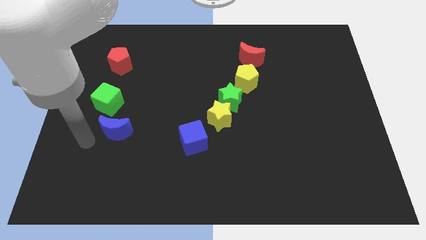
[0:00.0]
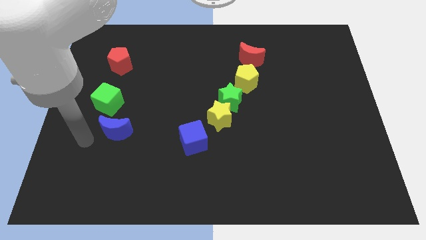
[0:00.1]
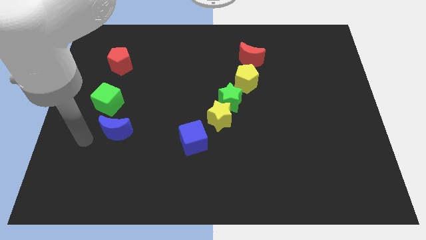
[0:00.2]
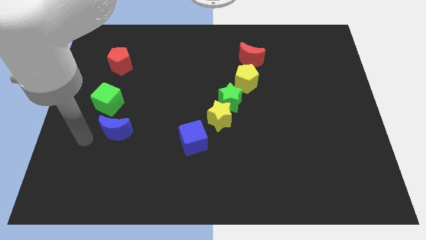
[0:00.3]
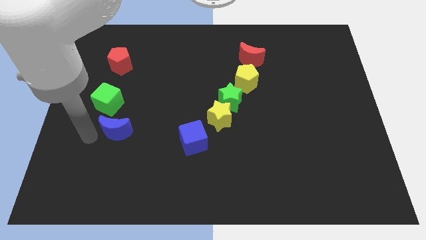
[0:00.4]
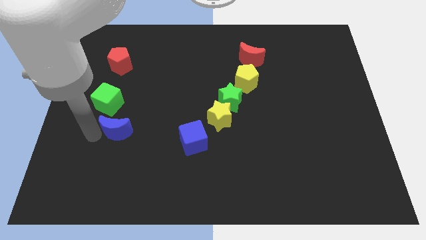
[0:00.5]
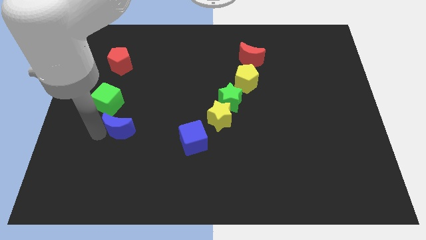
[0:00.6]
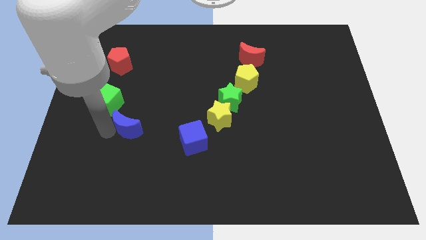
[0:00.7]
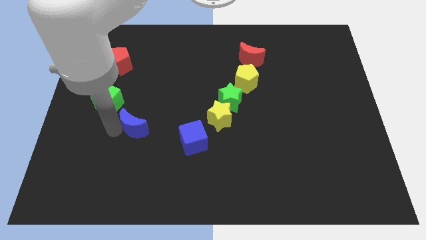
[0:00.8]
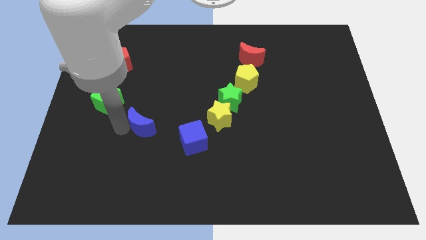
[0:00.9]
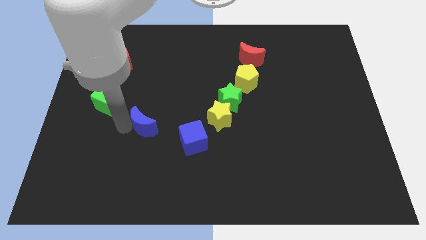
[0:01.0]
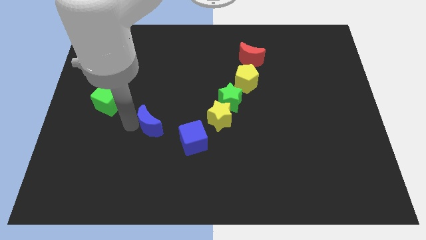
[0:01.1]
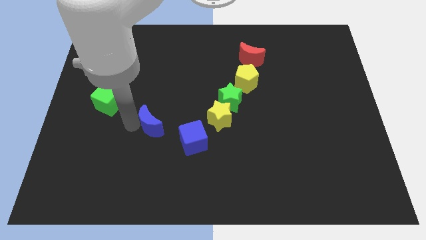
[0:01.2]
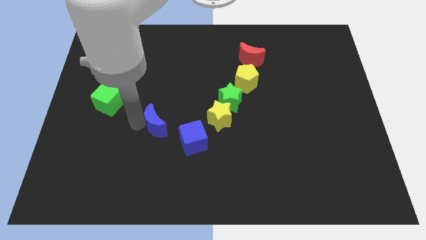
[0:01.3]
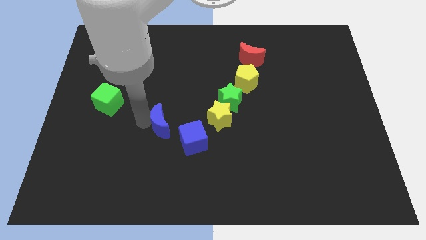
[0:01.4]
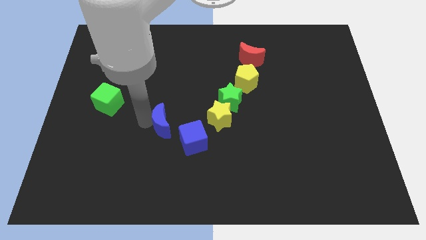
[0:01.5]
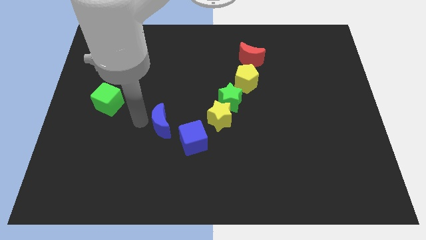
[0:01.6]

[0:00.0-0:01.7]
move the blue crescent to the center of the board

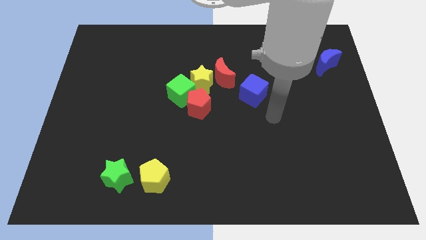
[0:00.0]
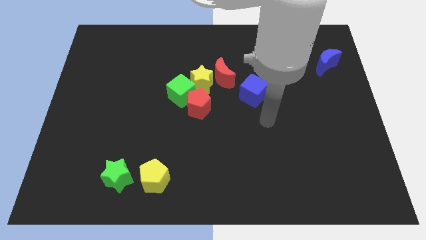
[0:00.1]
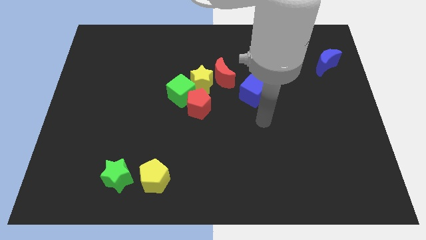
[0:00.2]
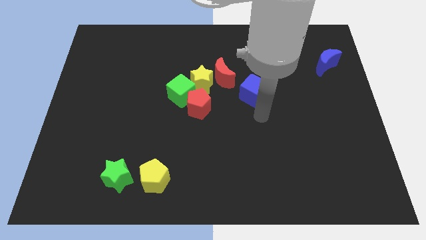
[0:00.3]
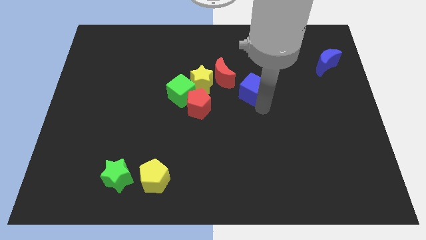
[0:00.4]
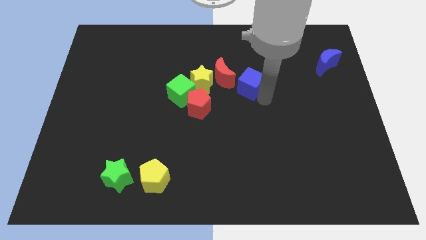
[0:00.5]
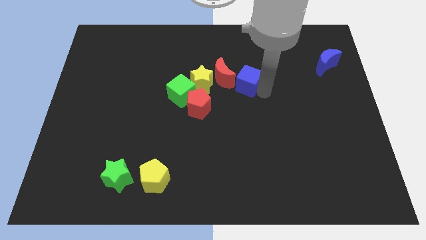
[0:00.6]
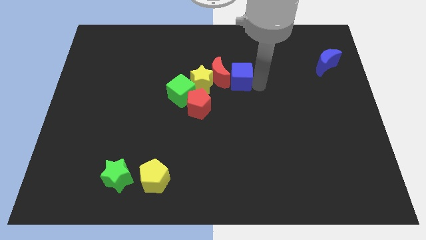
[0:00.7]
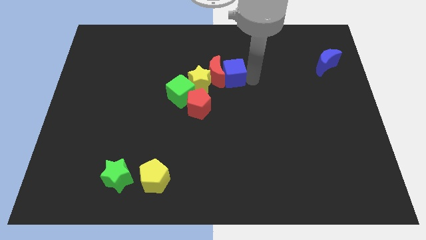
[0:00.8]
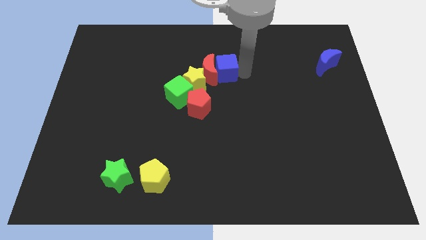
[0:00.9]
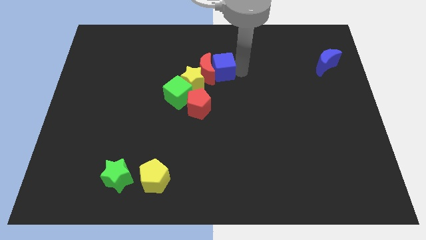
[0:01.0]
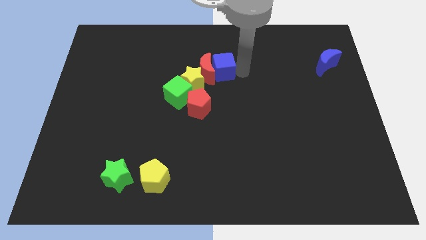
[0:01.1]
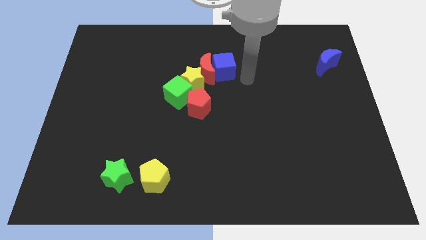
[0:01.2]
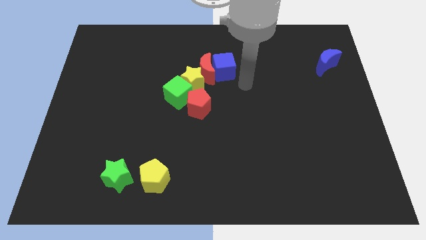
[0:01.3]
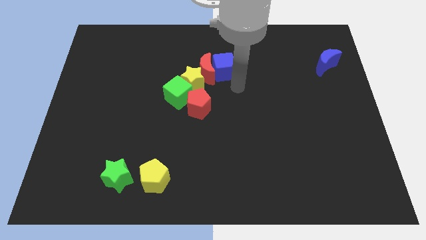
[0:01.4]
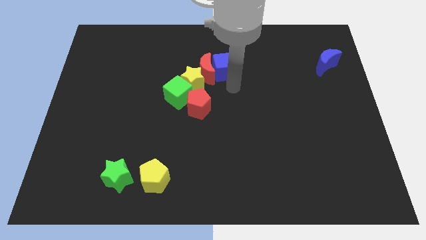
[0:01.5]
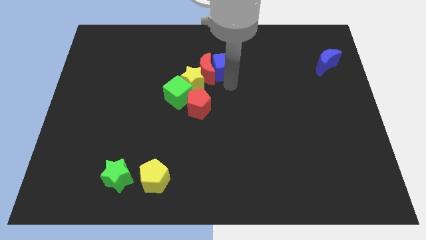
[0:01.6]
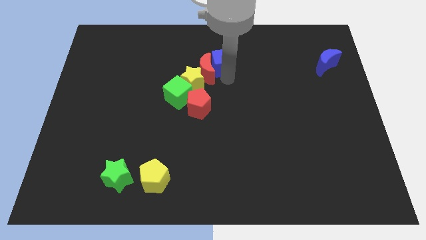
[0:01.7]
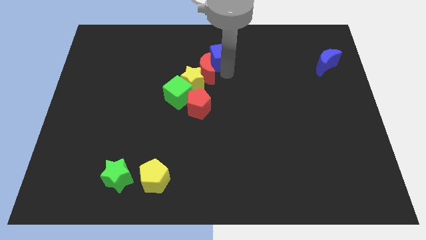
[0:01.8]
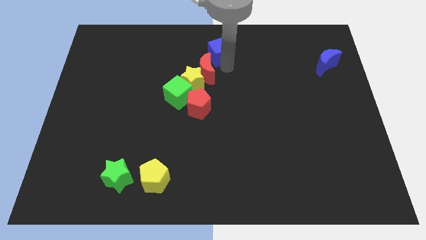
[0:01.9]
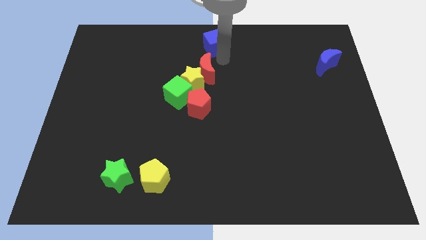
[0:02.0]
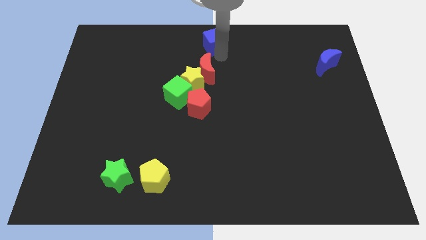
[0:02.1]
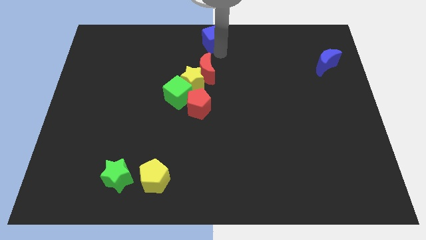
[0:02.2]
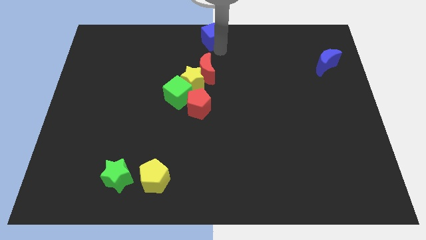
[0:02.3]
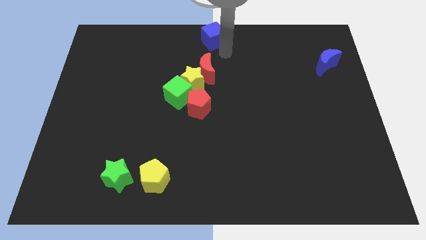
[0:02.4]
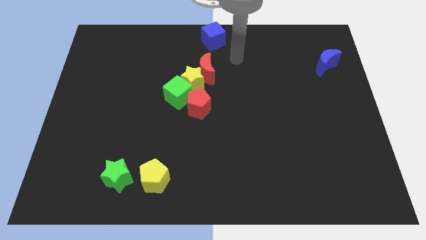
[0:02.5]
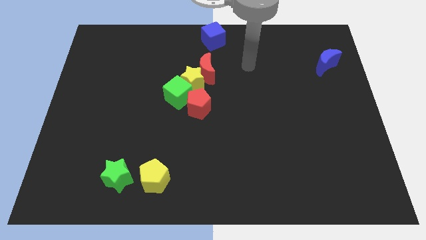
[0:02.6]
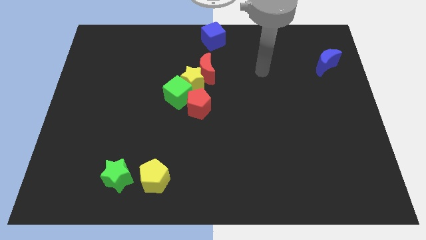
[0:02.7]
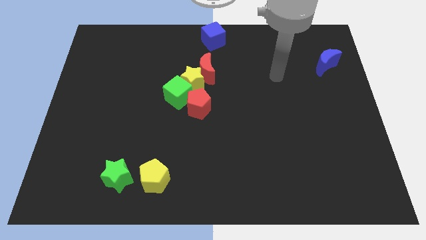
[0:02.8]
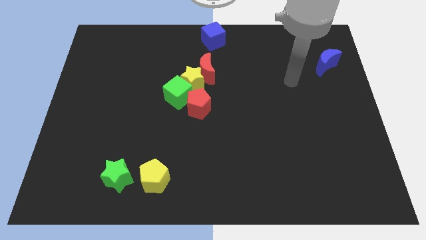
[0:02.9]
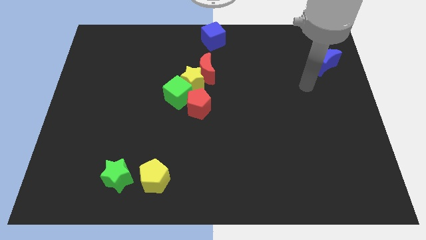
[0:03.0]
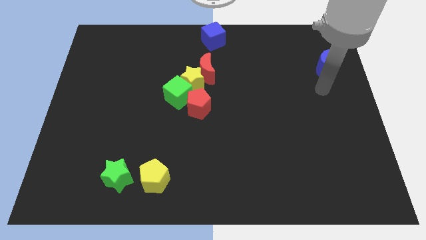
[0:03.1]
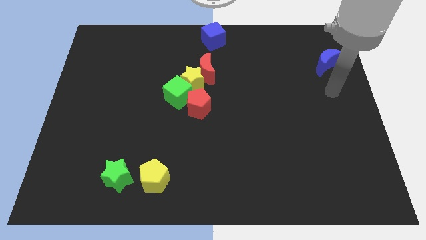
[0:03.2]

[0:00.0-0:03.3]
move the blue cube to the top middle of the board

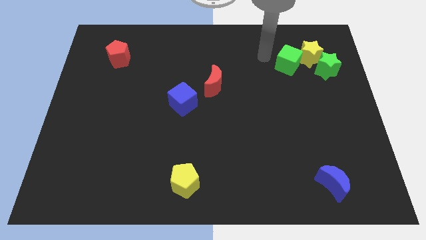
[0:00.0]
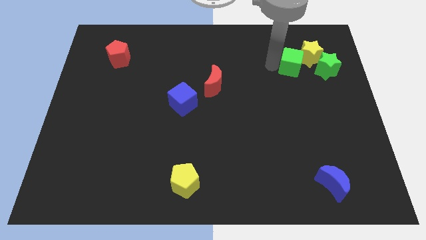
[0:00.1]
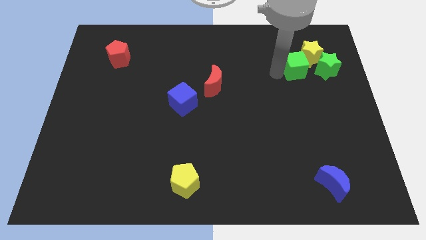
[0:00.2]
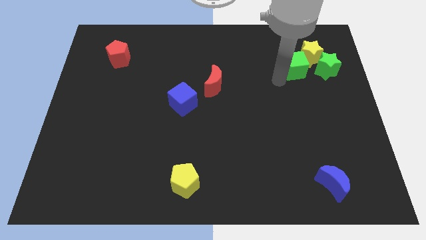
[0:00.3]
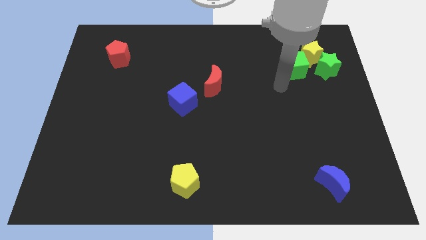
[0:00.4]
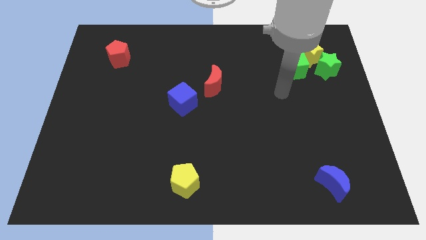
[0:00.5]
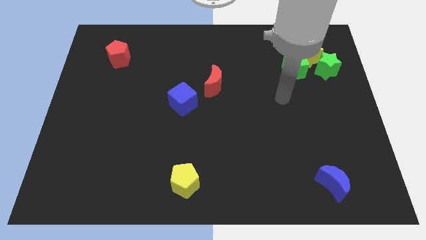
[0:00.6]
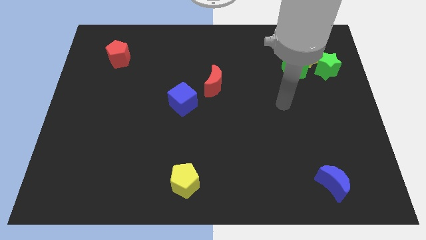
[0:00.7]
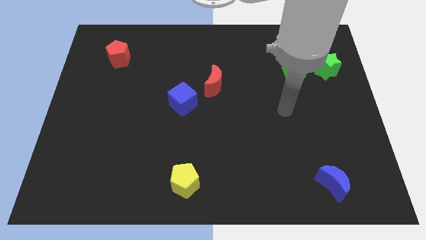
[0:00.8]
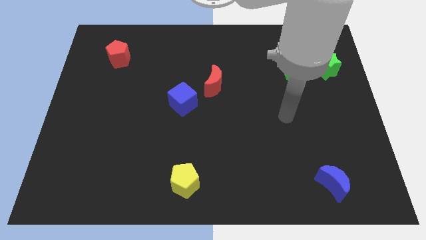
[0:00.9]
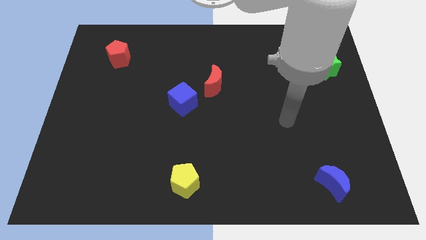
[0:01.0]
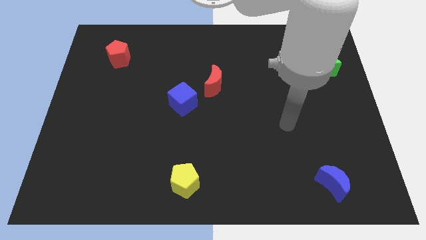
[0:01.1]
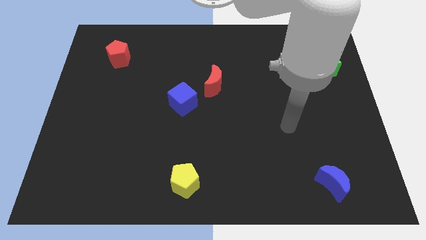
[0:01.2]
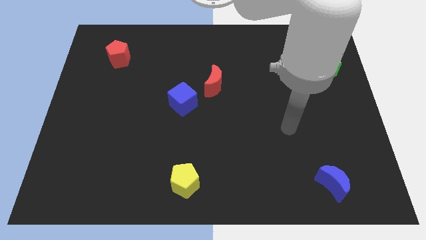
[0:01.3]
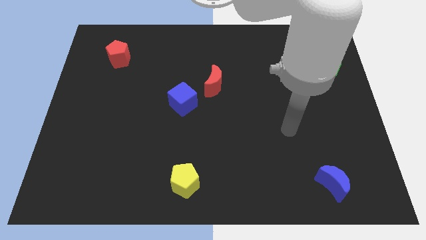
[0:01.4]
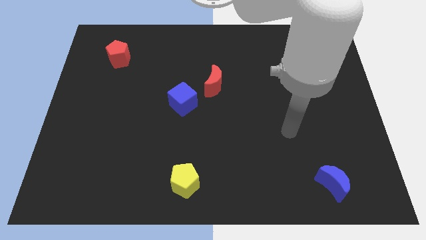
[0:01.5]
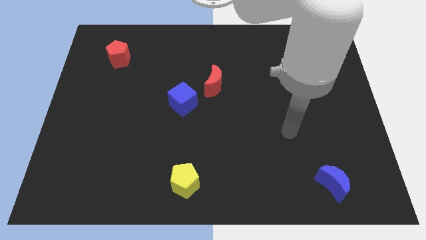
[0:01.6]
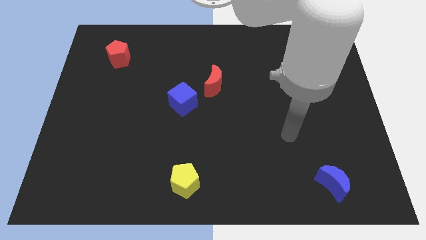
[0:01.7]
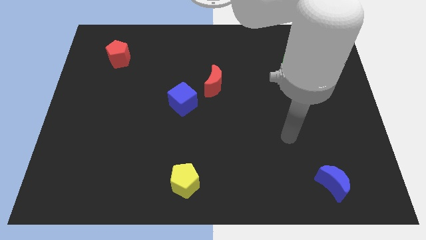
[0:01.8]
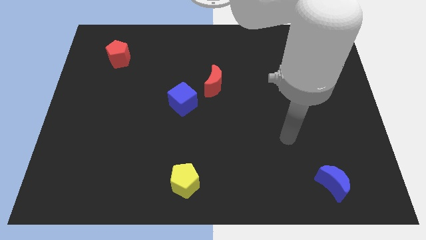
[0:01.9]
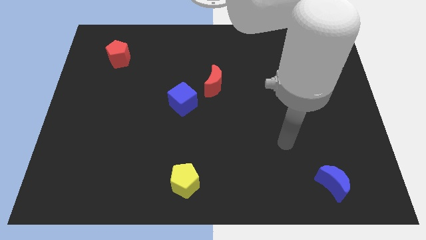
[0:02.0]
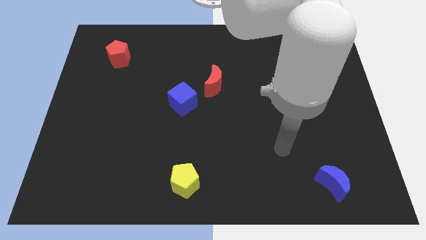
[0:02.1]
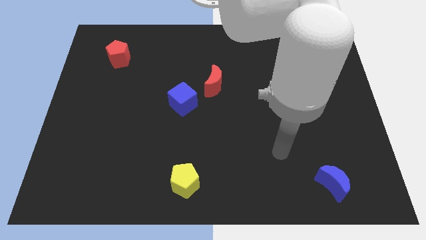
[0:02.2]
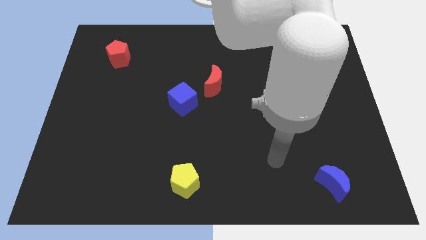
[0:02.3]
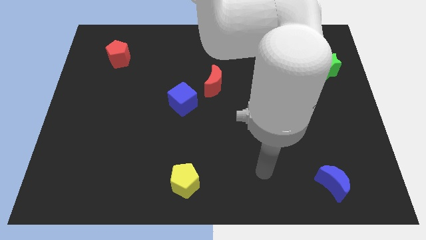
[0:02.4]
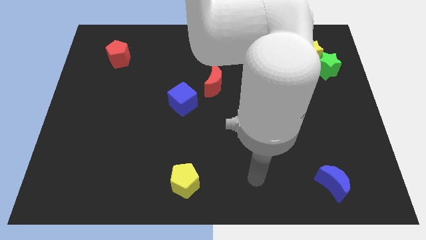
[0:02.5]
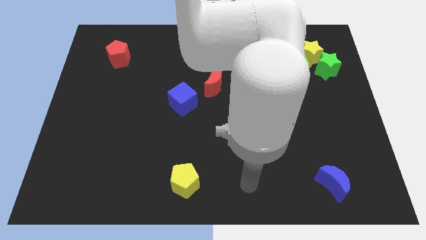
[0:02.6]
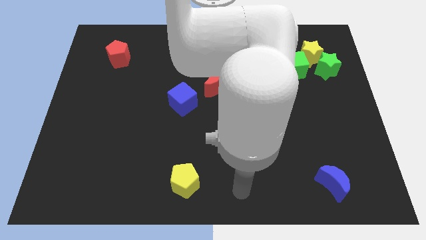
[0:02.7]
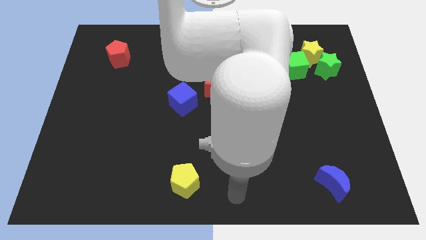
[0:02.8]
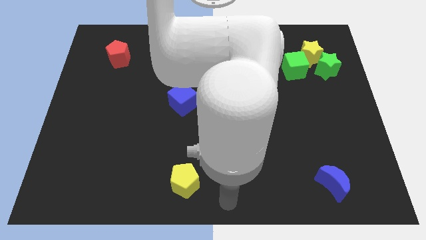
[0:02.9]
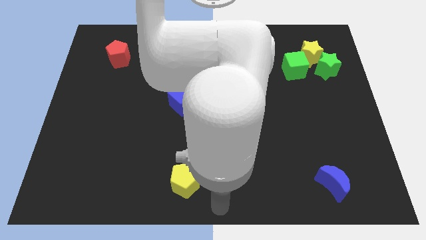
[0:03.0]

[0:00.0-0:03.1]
place arm at bottom center

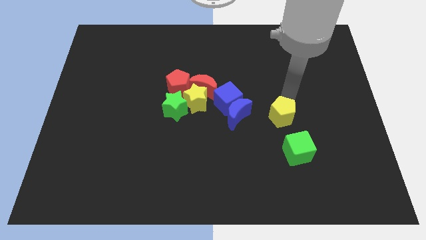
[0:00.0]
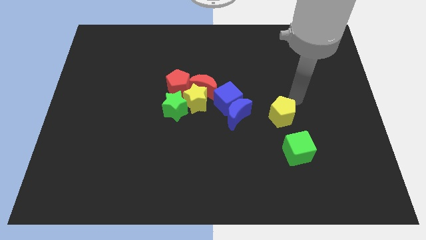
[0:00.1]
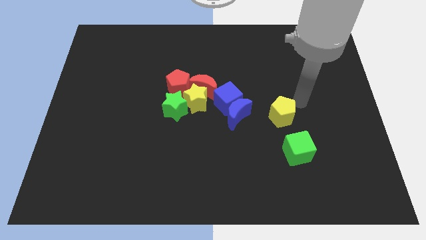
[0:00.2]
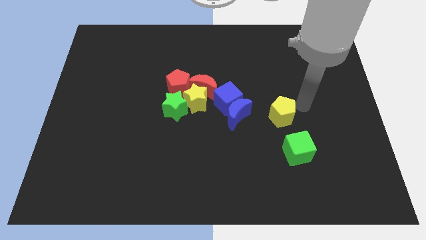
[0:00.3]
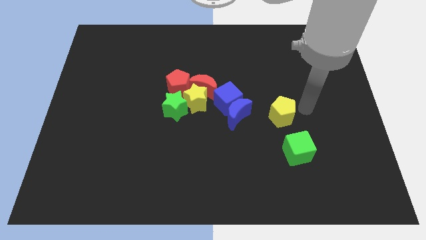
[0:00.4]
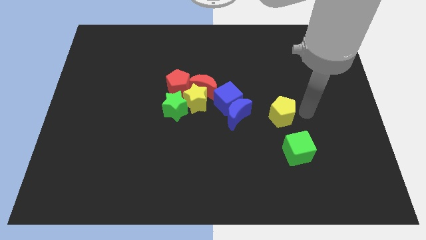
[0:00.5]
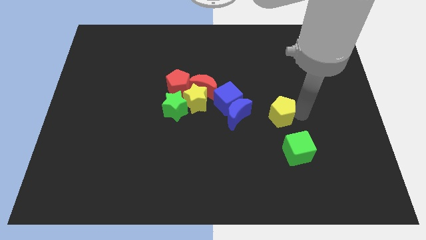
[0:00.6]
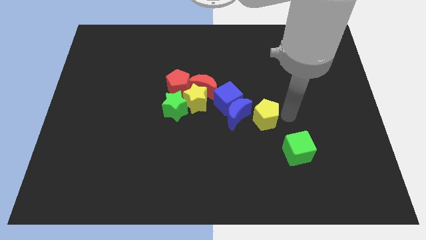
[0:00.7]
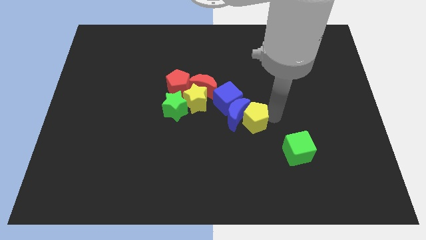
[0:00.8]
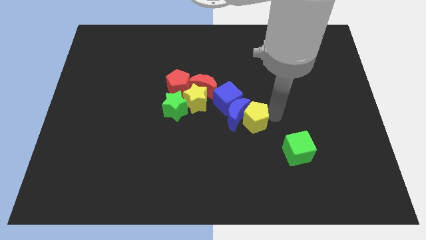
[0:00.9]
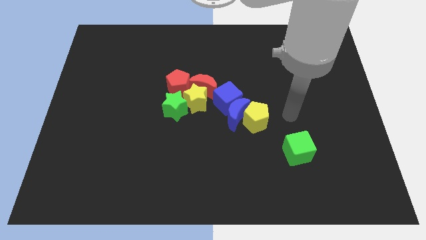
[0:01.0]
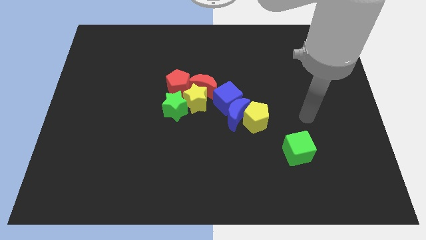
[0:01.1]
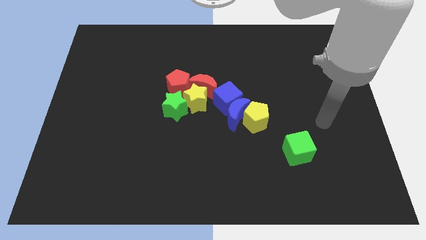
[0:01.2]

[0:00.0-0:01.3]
move the yellow pentagon into the blue crescent
